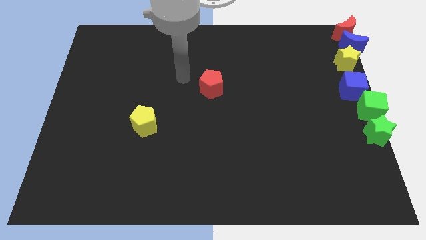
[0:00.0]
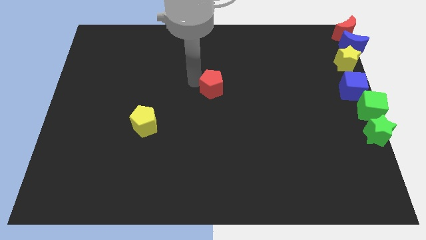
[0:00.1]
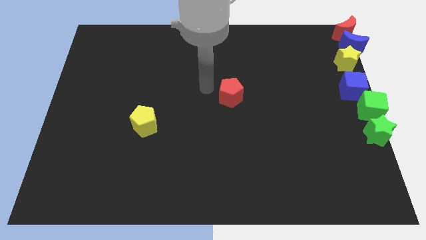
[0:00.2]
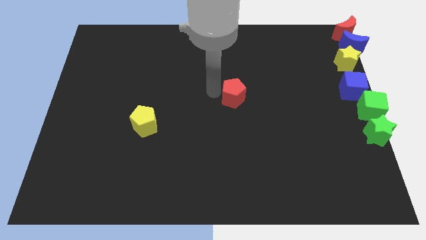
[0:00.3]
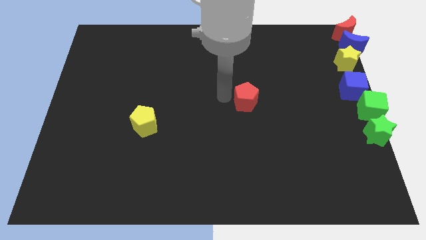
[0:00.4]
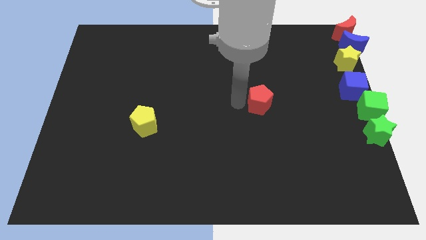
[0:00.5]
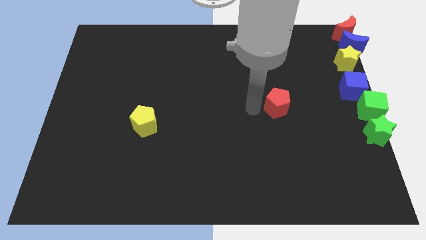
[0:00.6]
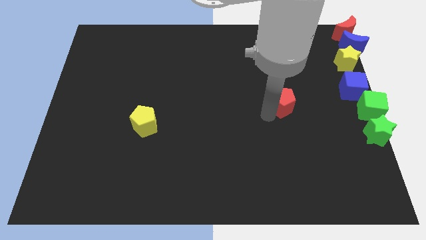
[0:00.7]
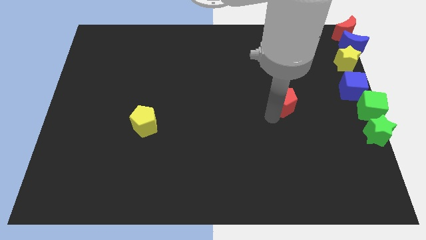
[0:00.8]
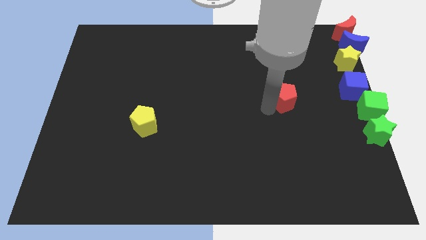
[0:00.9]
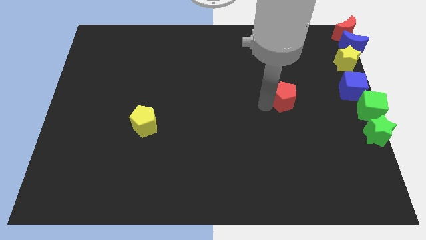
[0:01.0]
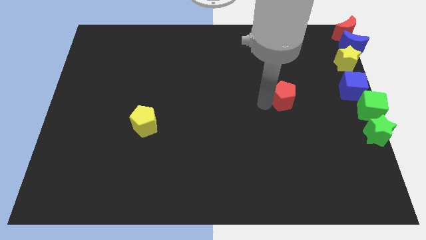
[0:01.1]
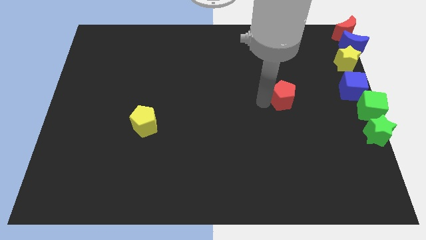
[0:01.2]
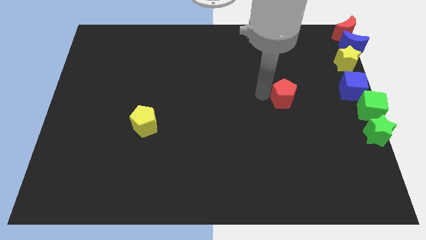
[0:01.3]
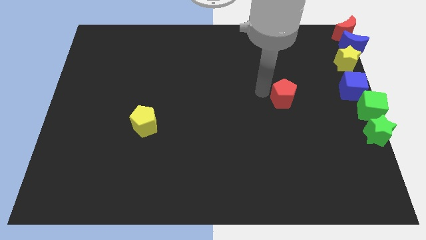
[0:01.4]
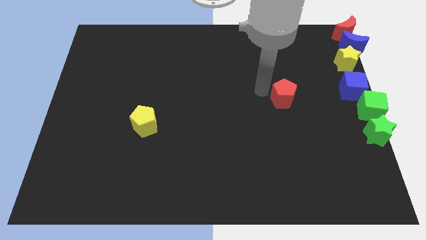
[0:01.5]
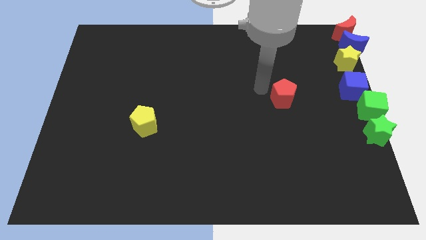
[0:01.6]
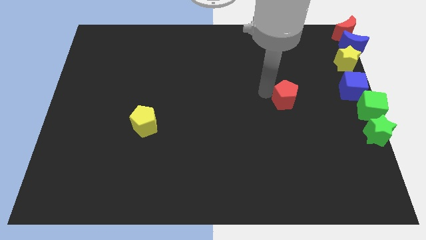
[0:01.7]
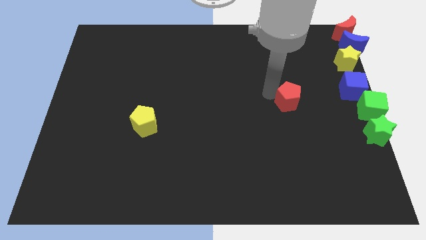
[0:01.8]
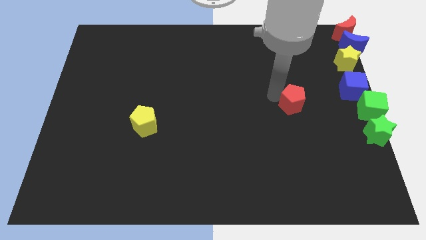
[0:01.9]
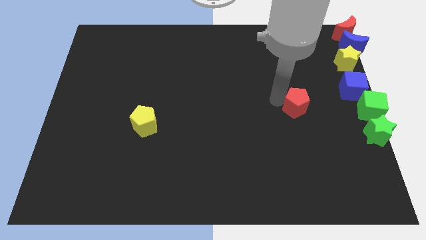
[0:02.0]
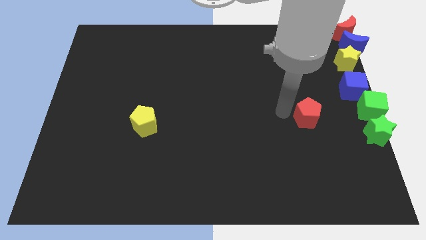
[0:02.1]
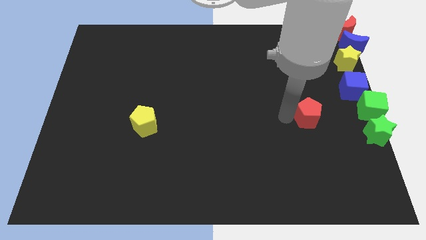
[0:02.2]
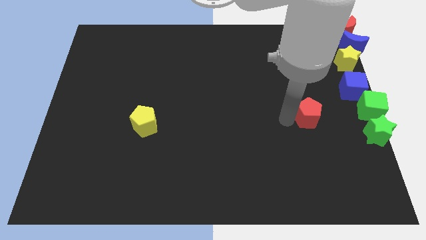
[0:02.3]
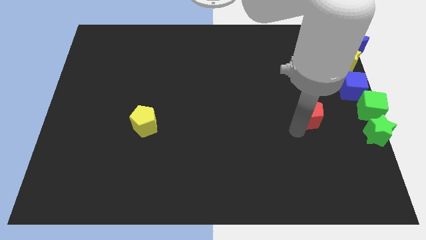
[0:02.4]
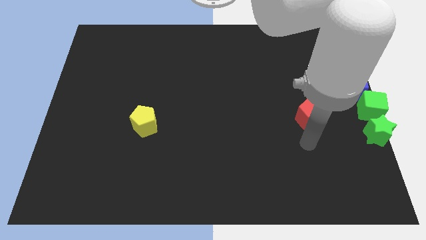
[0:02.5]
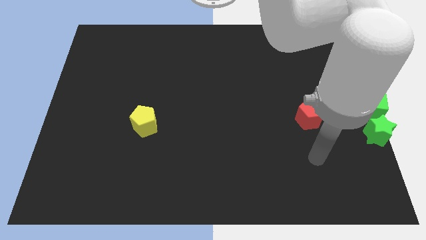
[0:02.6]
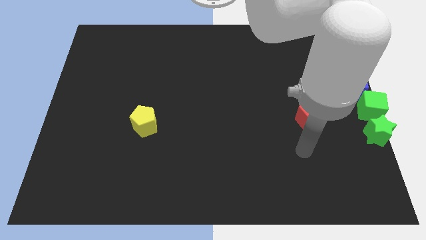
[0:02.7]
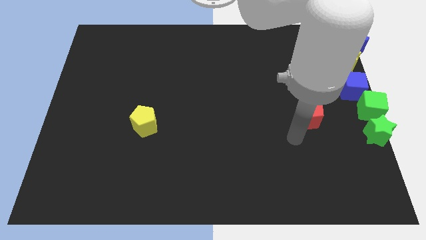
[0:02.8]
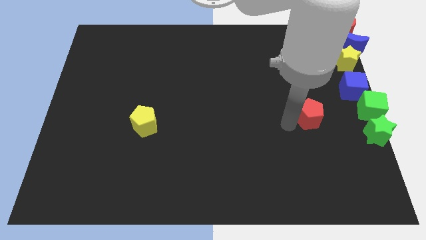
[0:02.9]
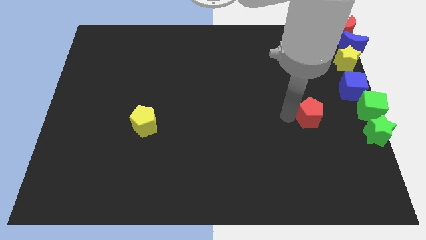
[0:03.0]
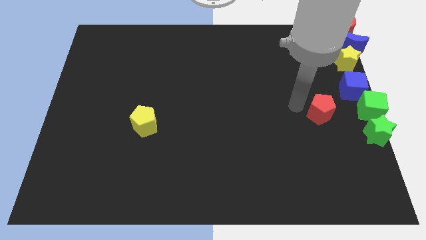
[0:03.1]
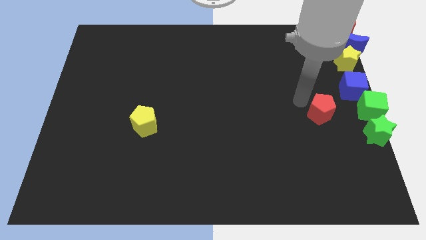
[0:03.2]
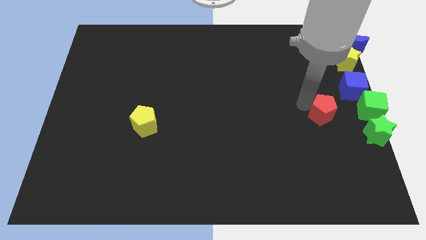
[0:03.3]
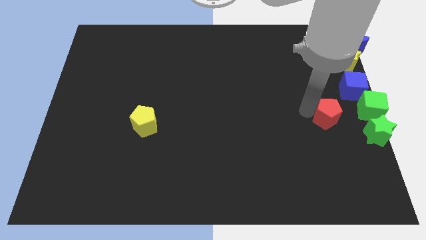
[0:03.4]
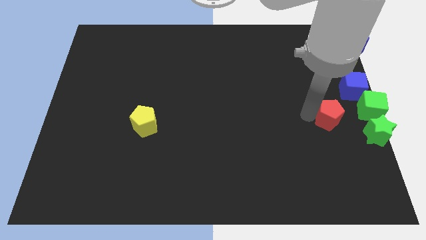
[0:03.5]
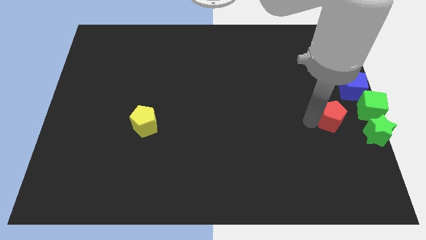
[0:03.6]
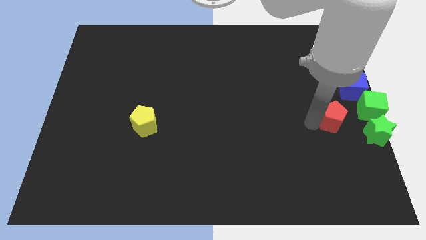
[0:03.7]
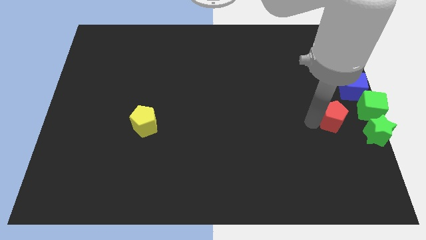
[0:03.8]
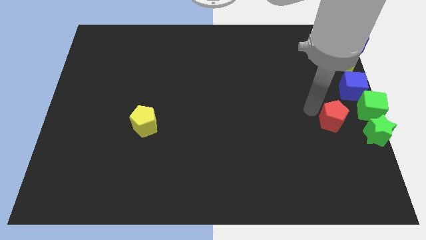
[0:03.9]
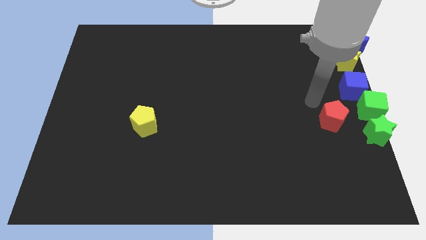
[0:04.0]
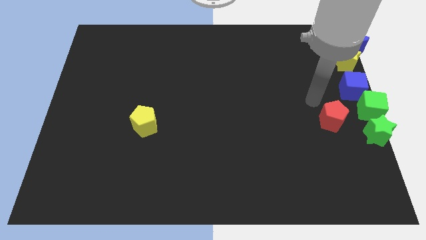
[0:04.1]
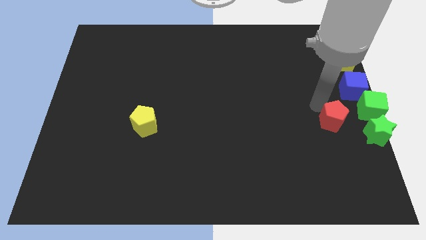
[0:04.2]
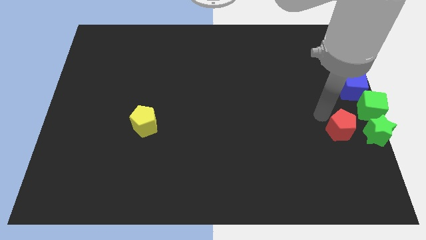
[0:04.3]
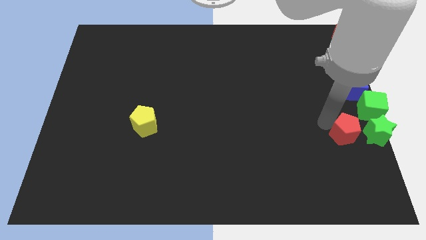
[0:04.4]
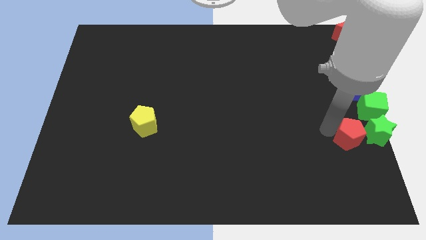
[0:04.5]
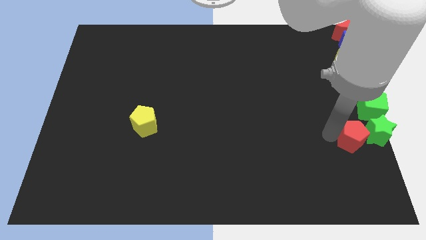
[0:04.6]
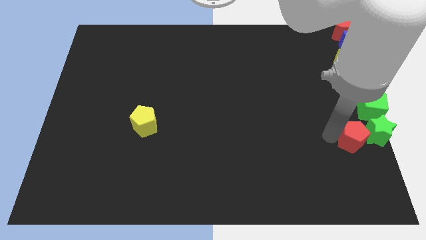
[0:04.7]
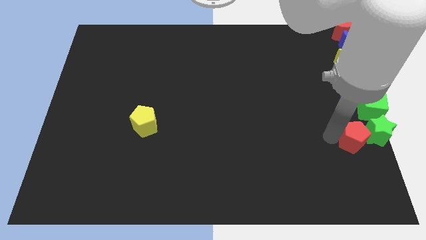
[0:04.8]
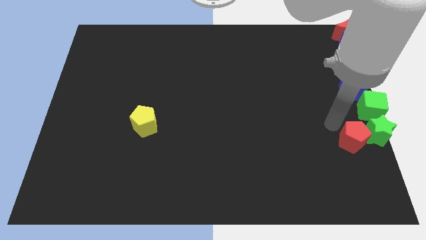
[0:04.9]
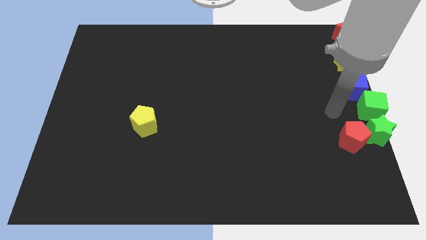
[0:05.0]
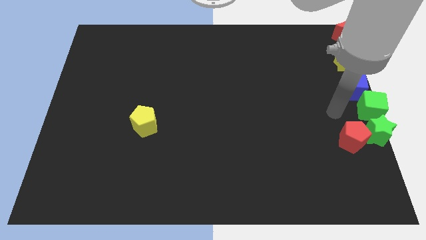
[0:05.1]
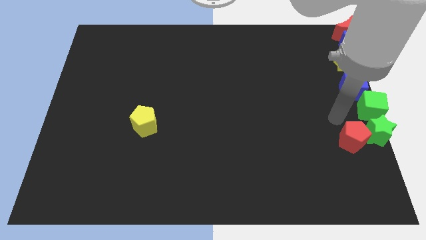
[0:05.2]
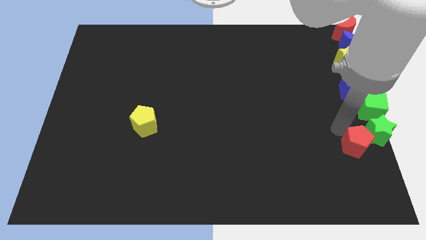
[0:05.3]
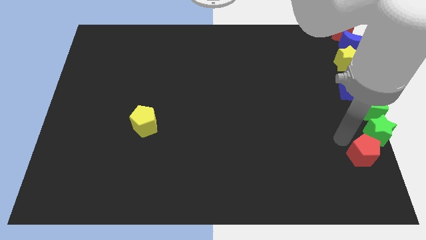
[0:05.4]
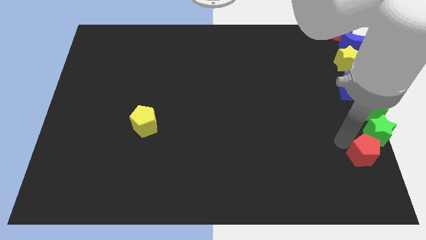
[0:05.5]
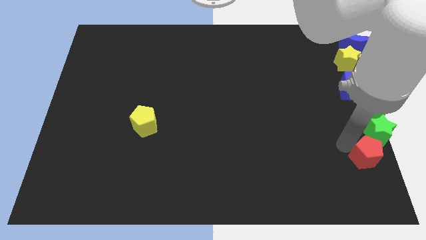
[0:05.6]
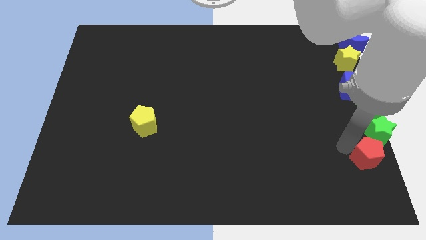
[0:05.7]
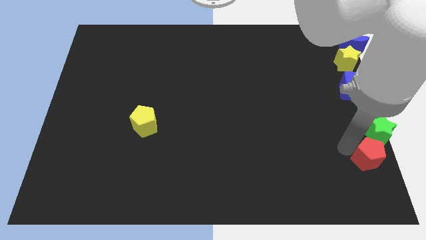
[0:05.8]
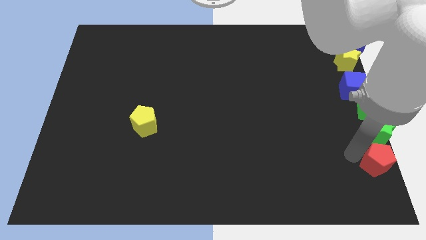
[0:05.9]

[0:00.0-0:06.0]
move red pentagon below green star

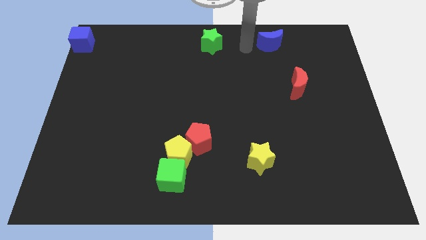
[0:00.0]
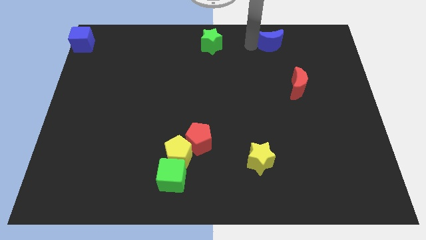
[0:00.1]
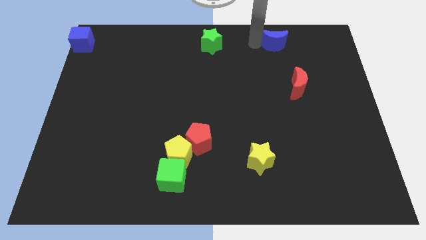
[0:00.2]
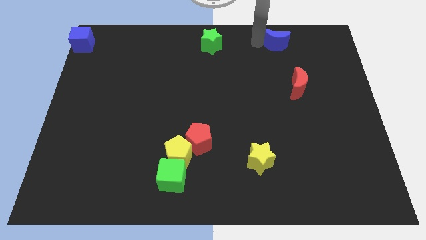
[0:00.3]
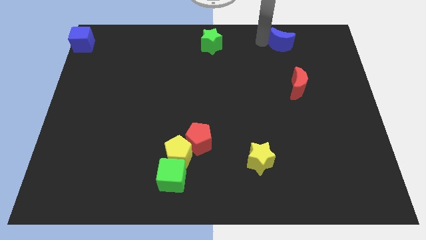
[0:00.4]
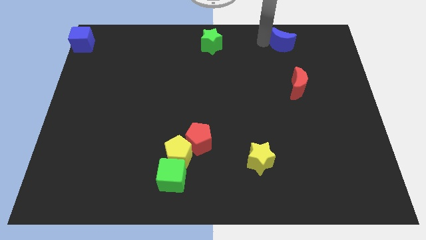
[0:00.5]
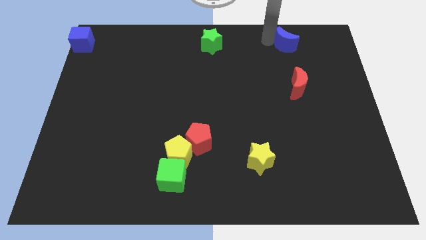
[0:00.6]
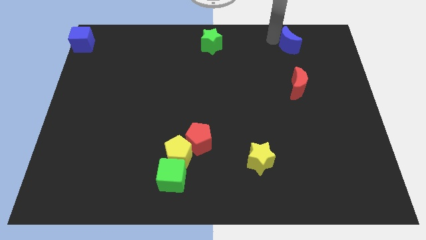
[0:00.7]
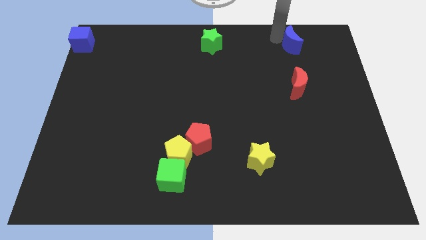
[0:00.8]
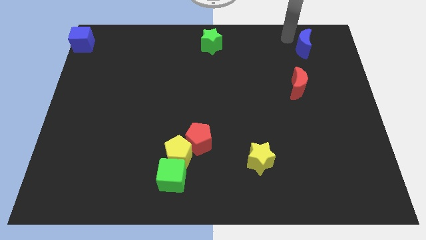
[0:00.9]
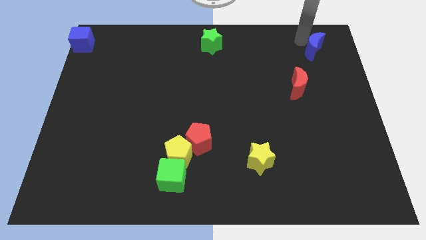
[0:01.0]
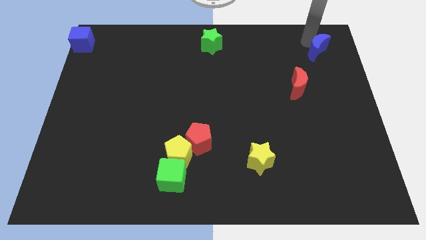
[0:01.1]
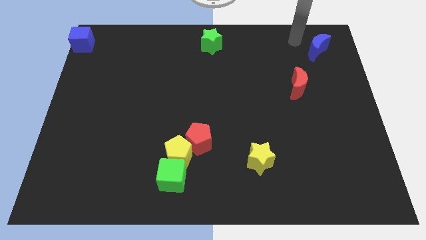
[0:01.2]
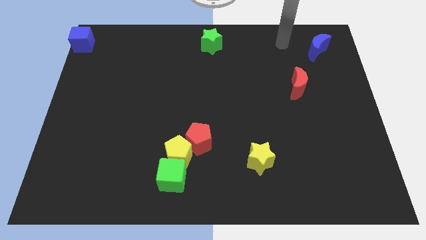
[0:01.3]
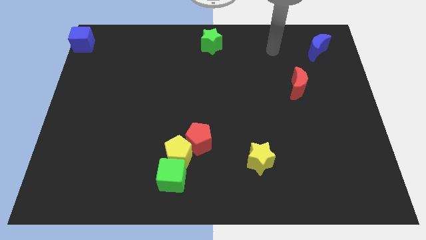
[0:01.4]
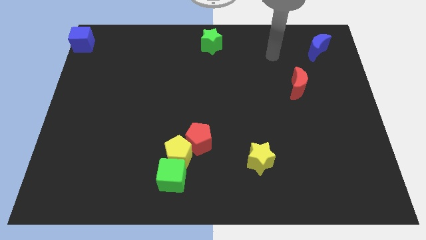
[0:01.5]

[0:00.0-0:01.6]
place the blue moon at the top right of the red moon

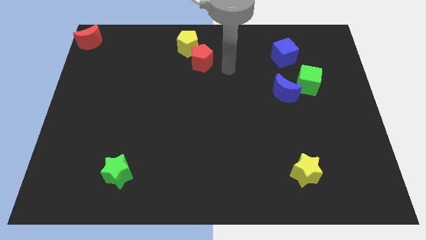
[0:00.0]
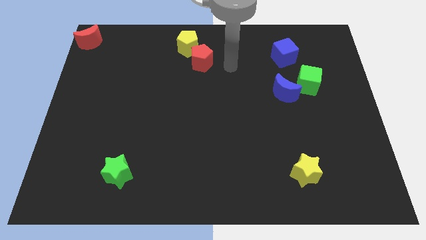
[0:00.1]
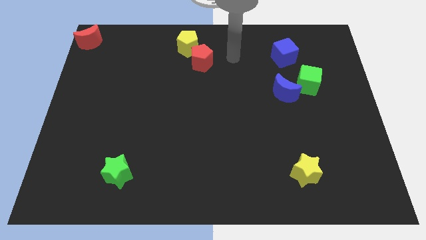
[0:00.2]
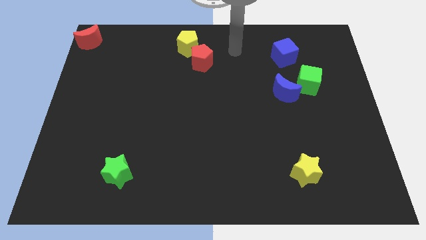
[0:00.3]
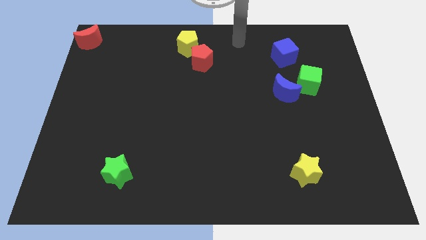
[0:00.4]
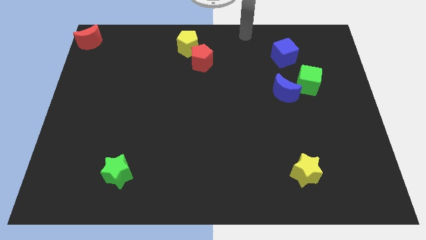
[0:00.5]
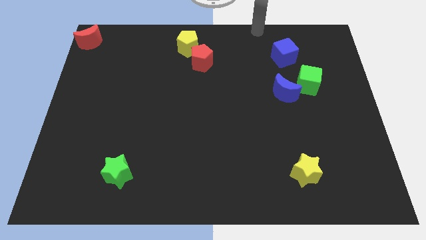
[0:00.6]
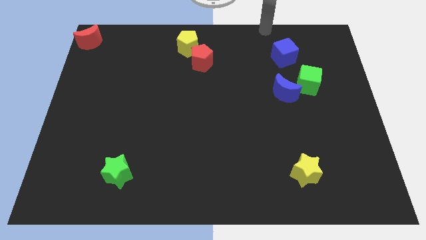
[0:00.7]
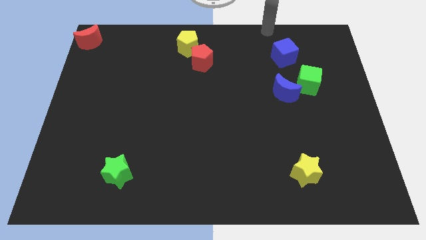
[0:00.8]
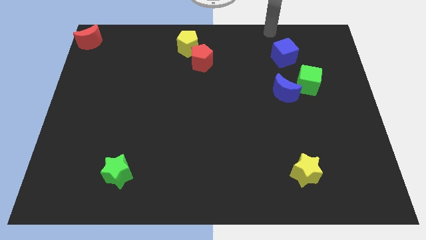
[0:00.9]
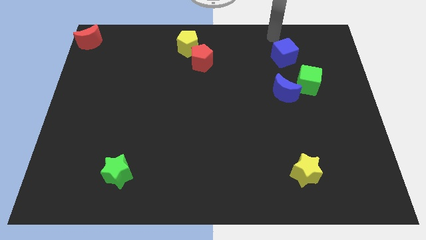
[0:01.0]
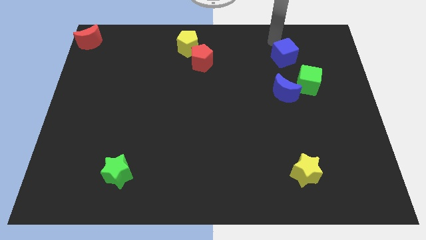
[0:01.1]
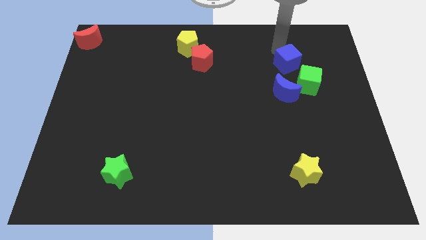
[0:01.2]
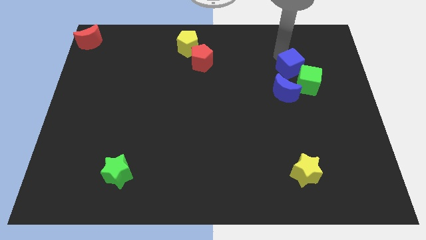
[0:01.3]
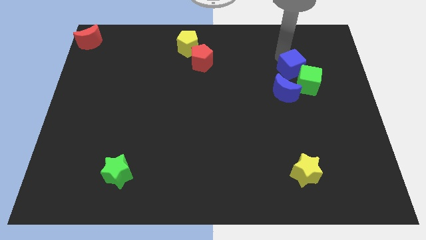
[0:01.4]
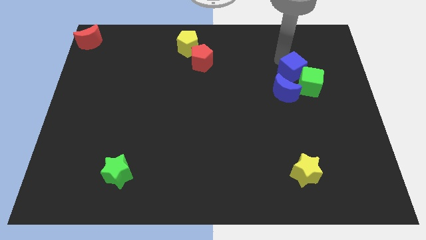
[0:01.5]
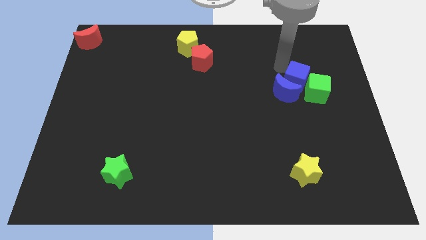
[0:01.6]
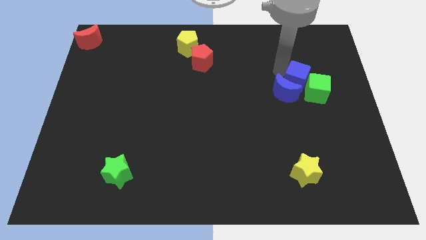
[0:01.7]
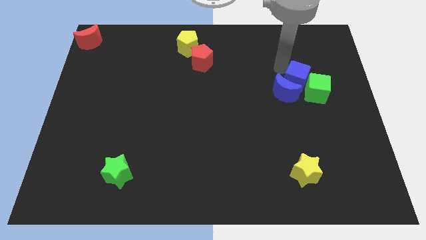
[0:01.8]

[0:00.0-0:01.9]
push the blue cube into the green cube and the blue moon
